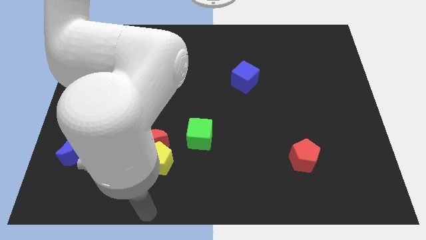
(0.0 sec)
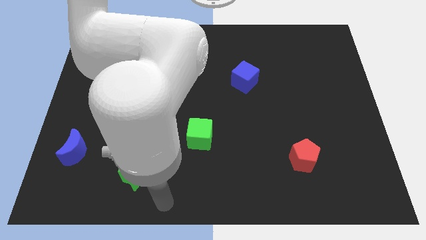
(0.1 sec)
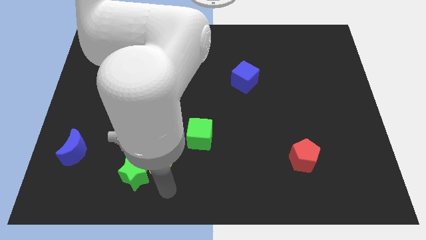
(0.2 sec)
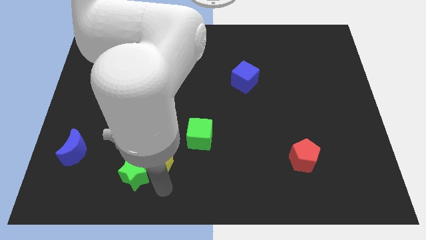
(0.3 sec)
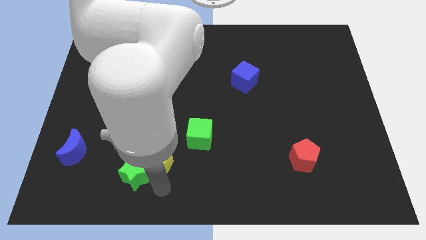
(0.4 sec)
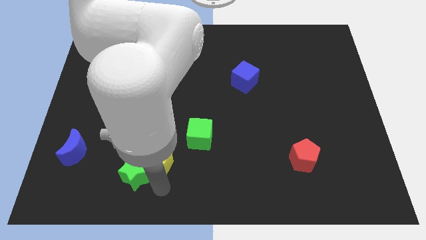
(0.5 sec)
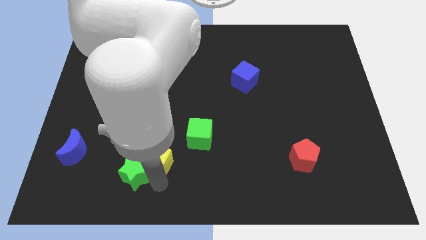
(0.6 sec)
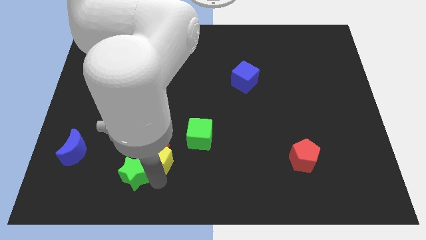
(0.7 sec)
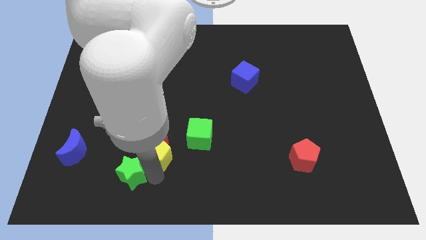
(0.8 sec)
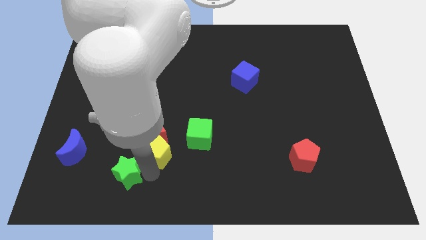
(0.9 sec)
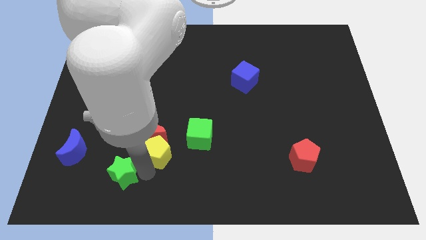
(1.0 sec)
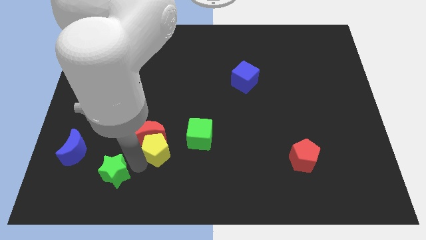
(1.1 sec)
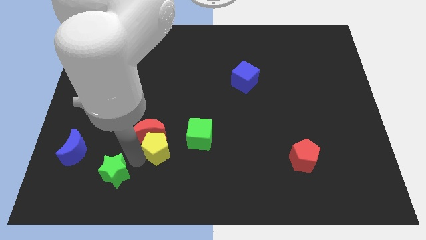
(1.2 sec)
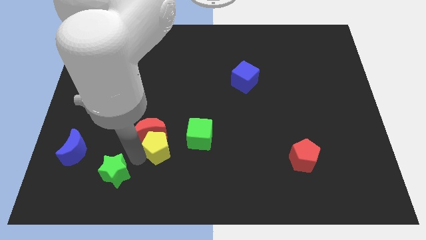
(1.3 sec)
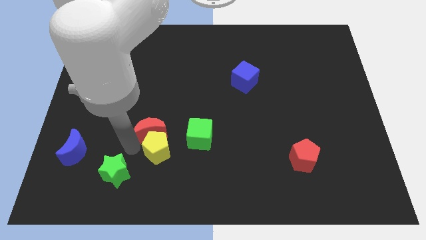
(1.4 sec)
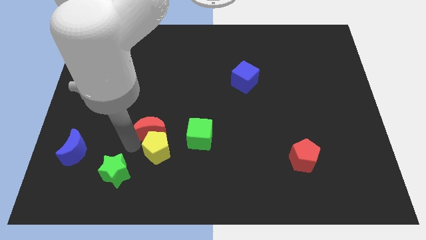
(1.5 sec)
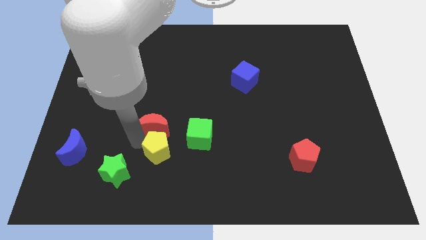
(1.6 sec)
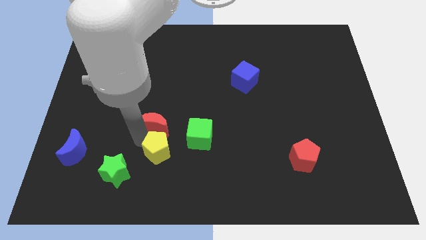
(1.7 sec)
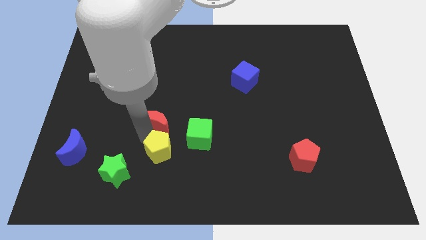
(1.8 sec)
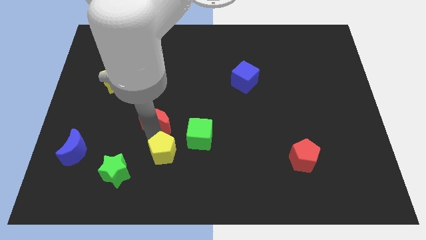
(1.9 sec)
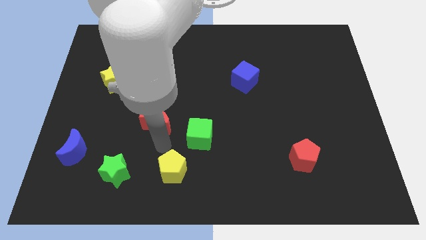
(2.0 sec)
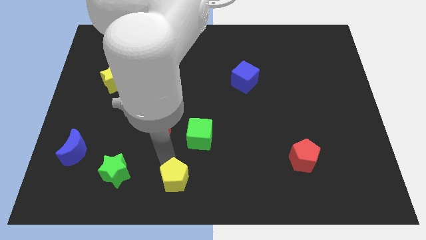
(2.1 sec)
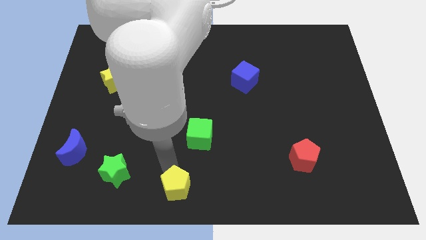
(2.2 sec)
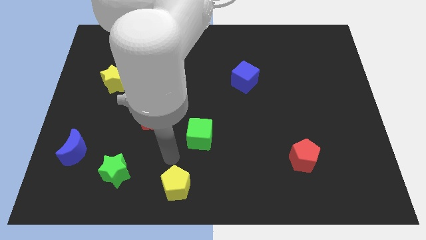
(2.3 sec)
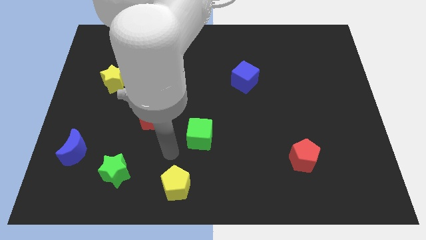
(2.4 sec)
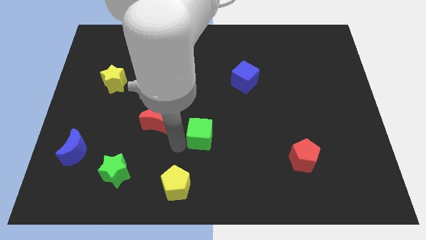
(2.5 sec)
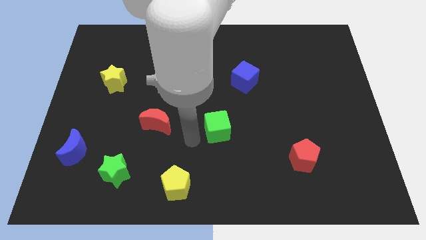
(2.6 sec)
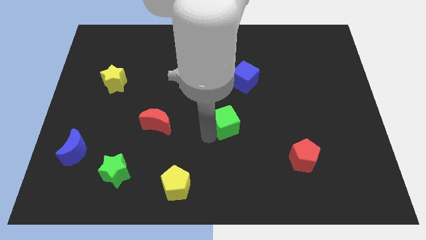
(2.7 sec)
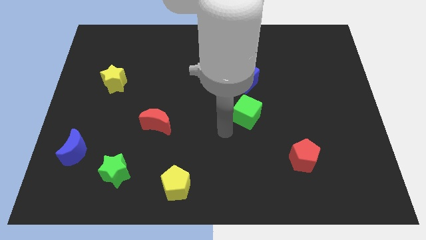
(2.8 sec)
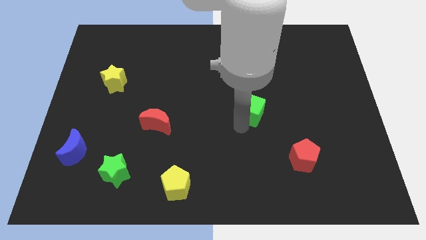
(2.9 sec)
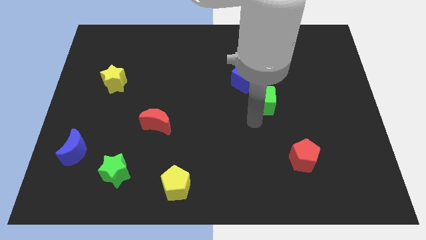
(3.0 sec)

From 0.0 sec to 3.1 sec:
separate green blocks red moon and yellow pentagon from each other

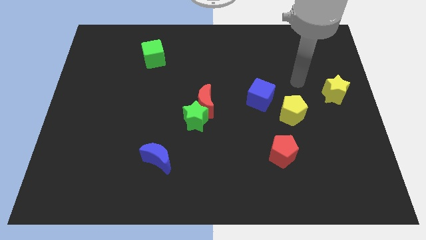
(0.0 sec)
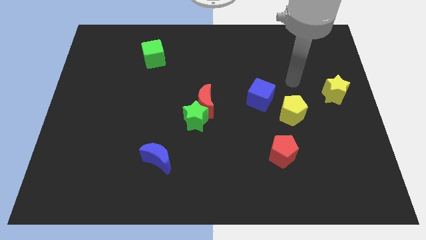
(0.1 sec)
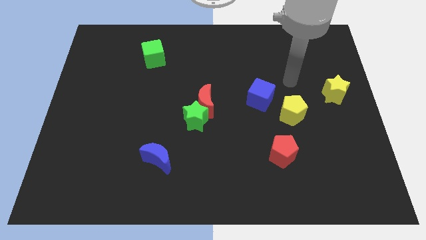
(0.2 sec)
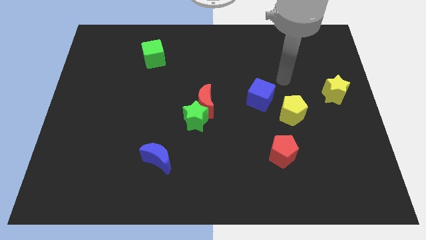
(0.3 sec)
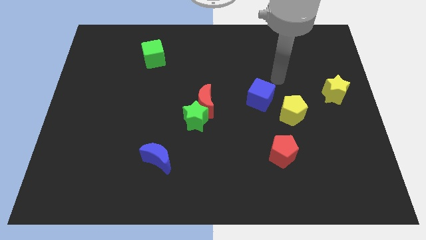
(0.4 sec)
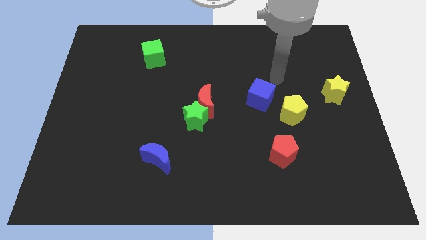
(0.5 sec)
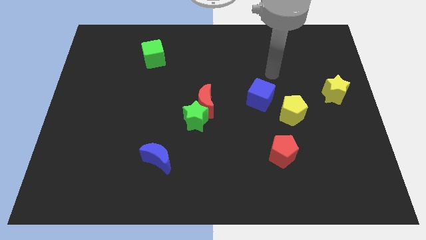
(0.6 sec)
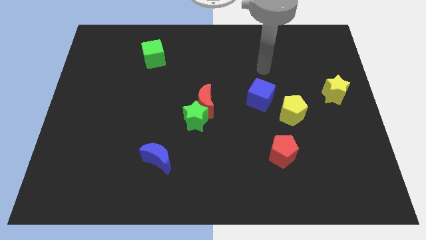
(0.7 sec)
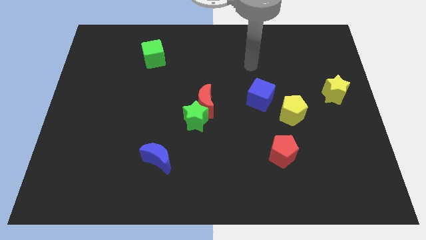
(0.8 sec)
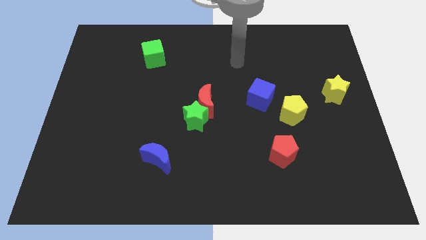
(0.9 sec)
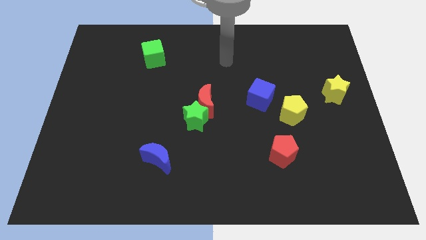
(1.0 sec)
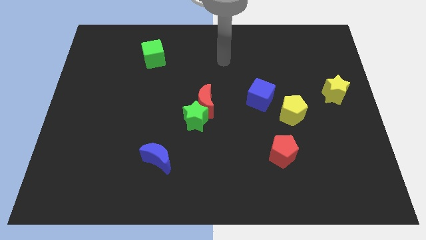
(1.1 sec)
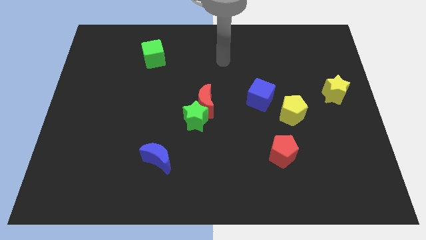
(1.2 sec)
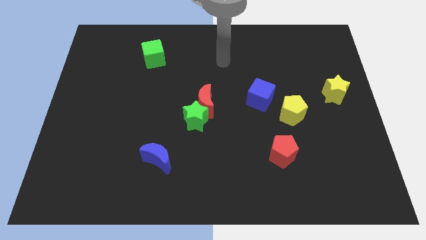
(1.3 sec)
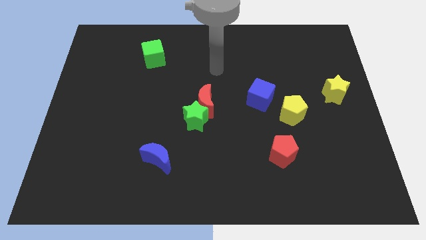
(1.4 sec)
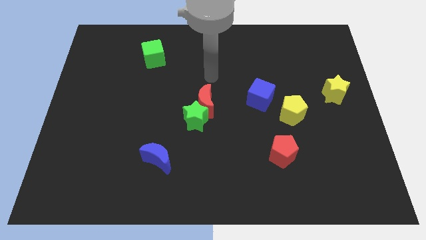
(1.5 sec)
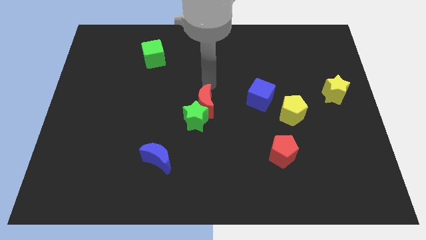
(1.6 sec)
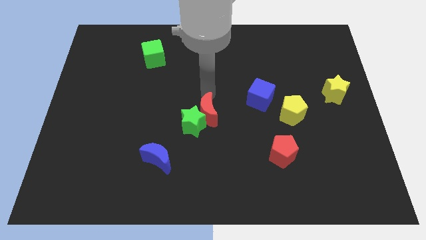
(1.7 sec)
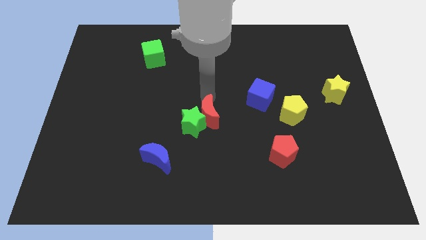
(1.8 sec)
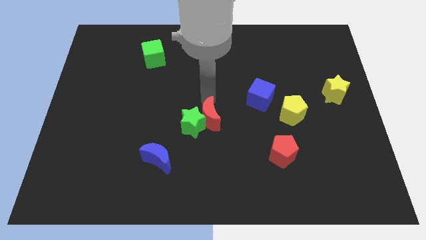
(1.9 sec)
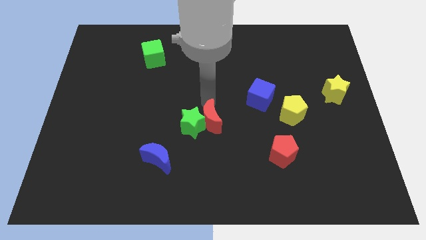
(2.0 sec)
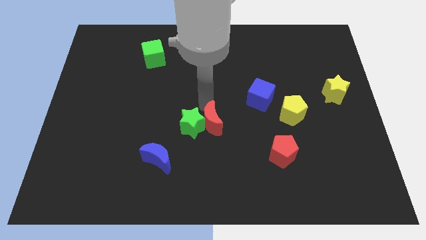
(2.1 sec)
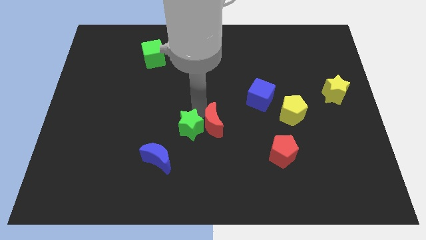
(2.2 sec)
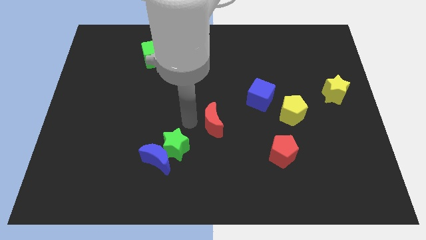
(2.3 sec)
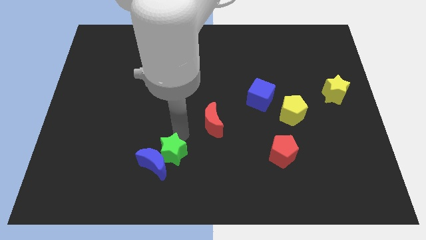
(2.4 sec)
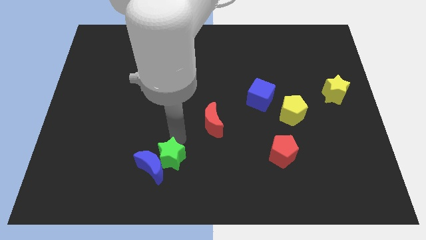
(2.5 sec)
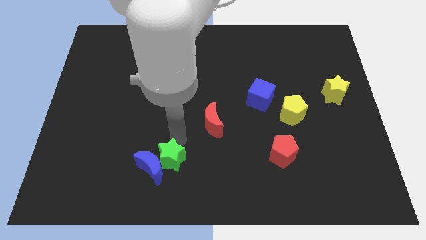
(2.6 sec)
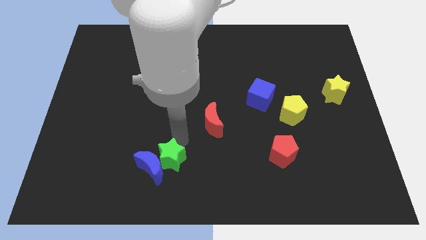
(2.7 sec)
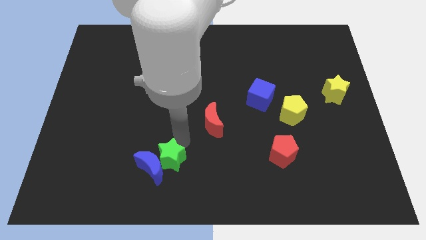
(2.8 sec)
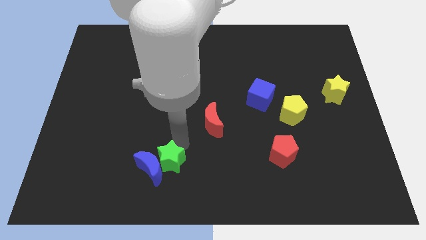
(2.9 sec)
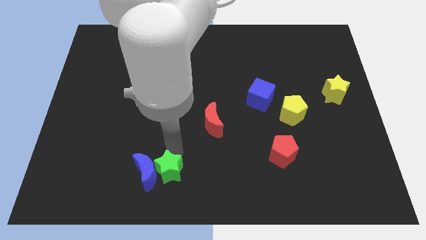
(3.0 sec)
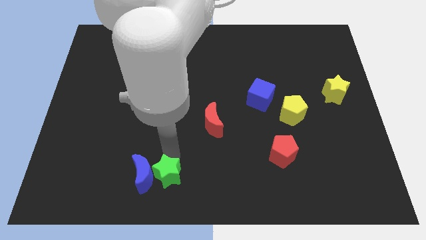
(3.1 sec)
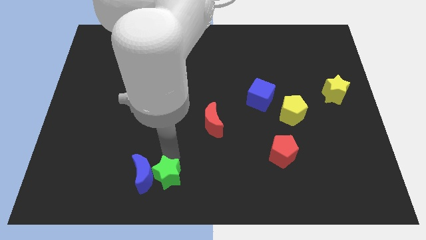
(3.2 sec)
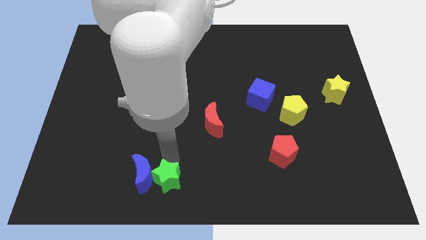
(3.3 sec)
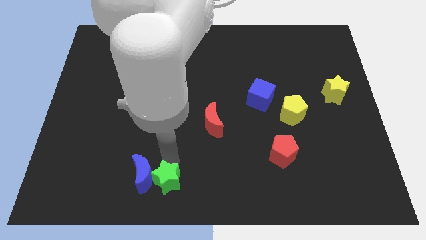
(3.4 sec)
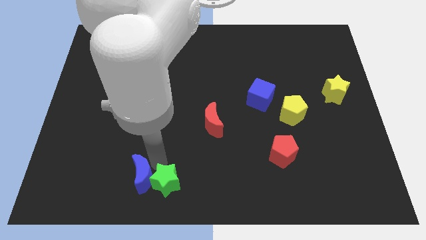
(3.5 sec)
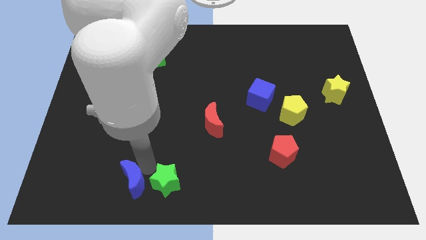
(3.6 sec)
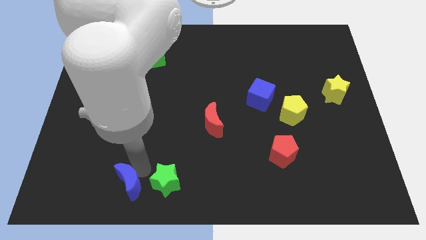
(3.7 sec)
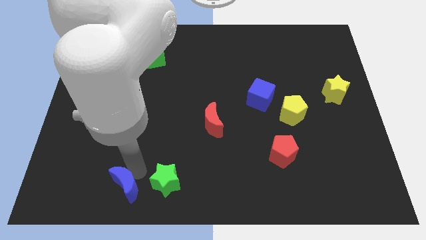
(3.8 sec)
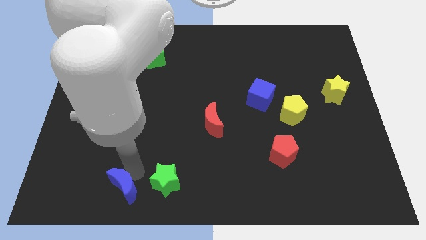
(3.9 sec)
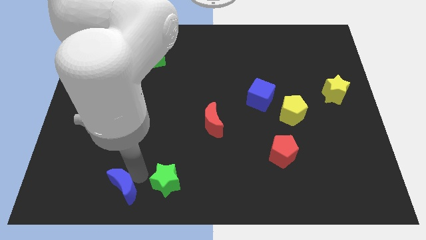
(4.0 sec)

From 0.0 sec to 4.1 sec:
push the green star into the blue crescent

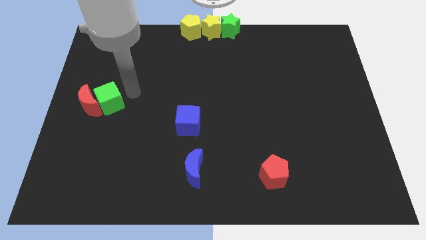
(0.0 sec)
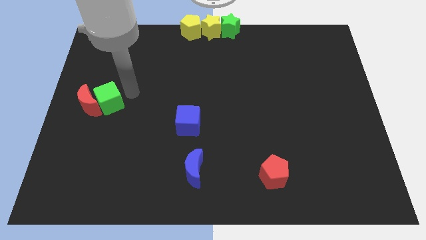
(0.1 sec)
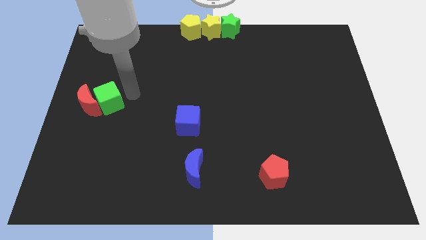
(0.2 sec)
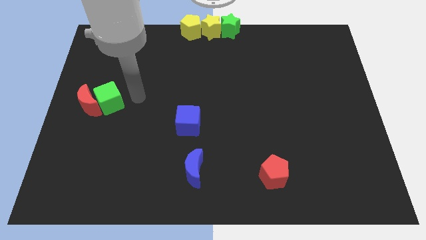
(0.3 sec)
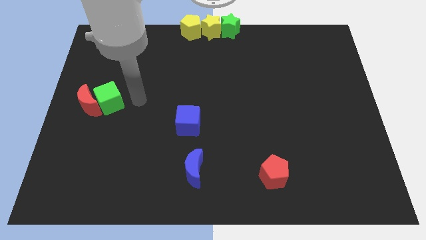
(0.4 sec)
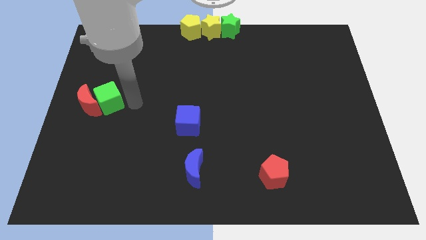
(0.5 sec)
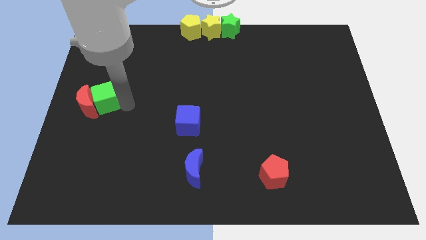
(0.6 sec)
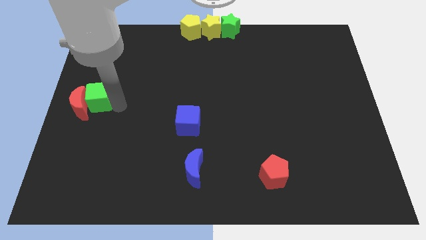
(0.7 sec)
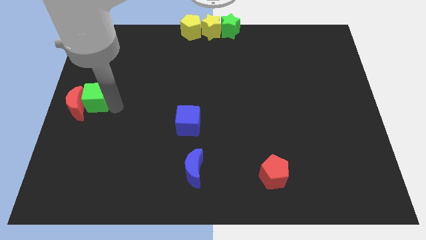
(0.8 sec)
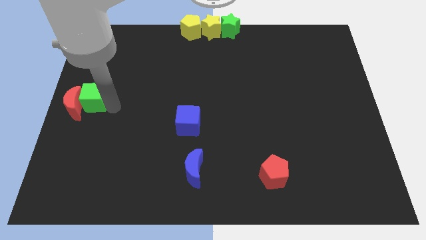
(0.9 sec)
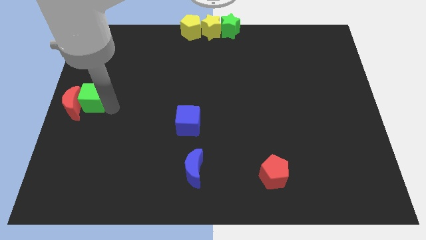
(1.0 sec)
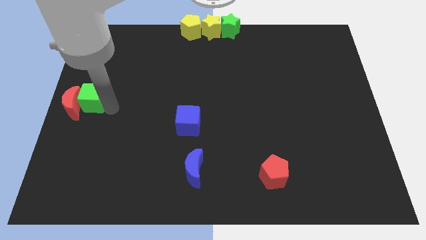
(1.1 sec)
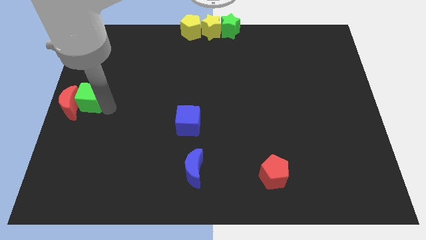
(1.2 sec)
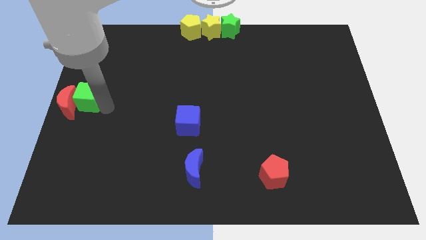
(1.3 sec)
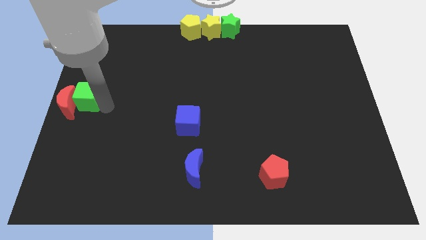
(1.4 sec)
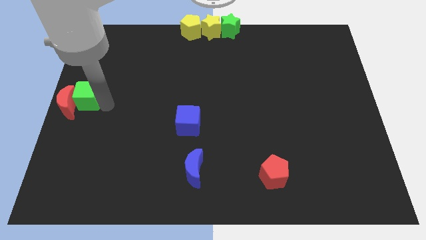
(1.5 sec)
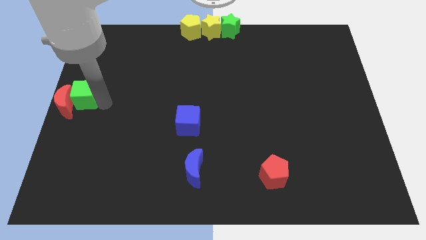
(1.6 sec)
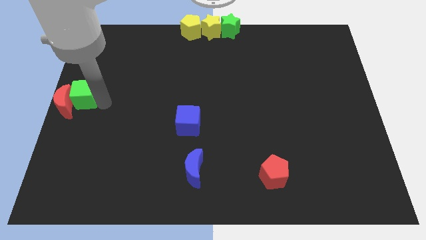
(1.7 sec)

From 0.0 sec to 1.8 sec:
move the green cube along with the red moon towards the center left
